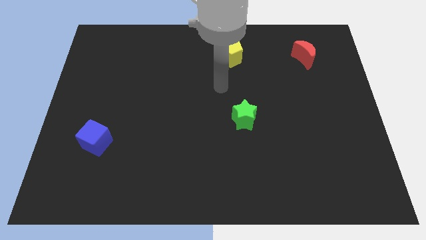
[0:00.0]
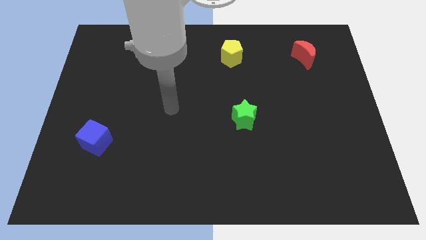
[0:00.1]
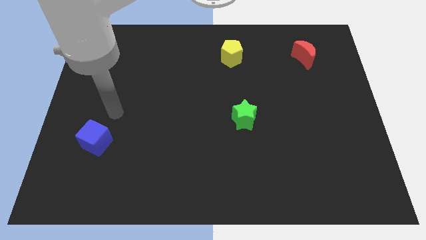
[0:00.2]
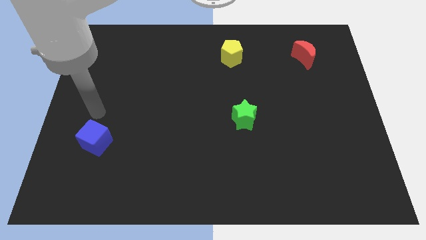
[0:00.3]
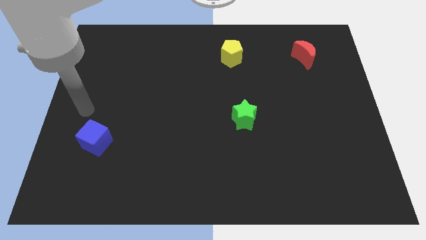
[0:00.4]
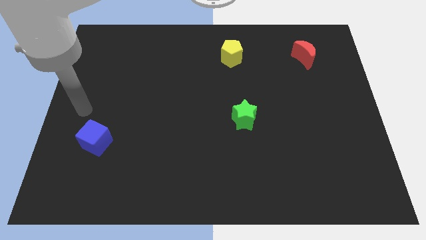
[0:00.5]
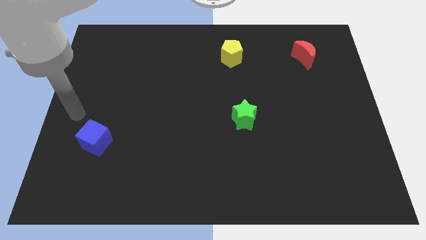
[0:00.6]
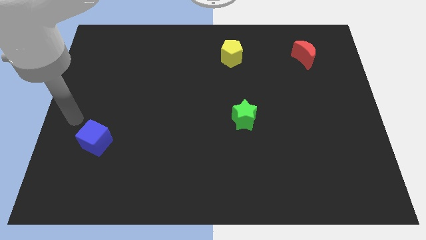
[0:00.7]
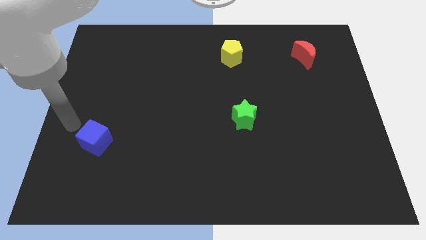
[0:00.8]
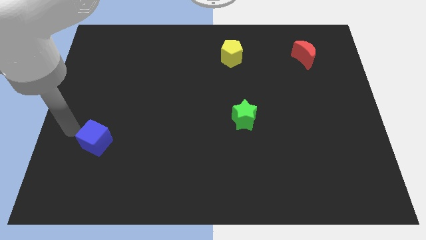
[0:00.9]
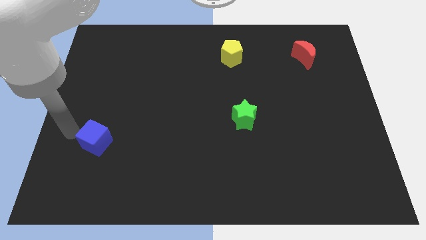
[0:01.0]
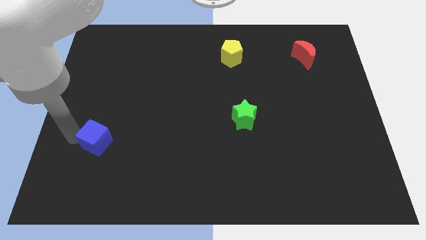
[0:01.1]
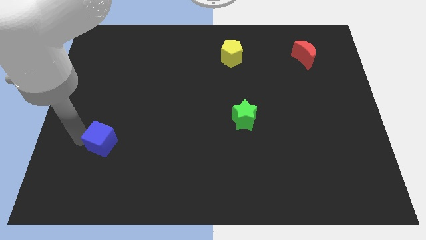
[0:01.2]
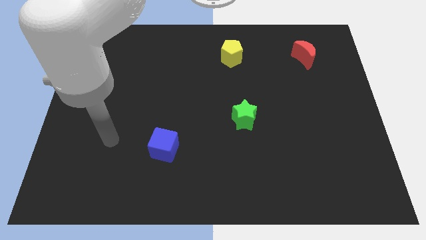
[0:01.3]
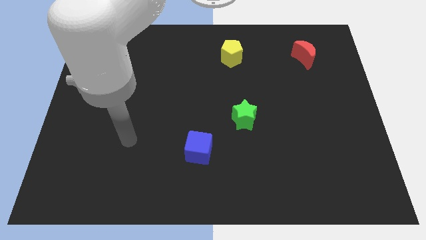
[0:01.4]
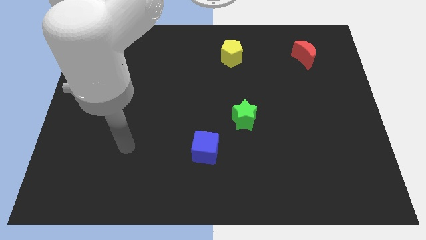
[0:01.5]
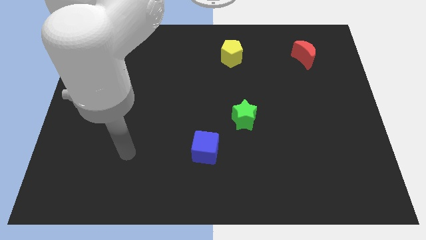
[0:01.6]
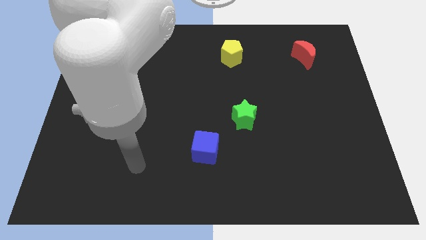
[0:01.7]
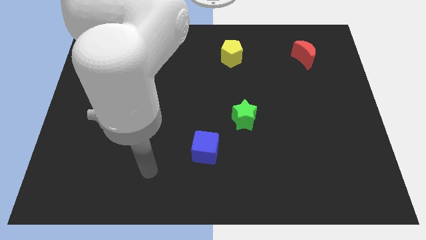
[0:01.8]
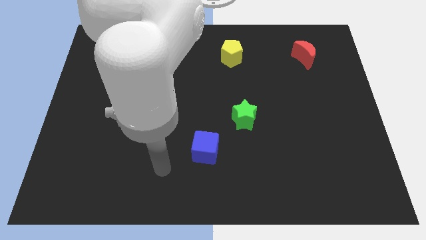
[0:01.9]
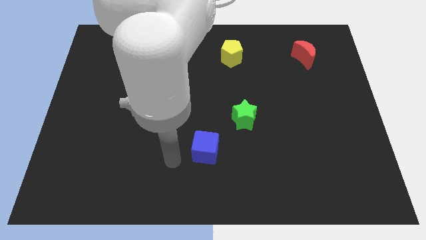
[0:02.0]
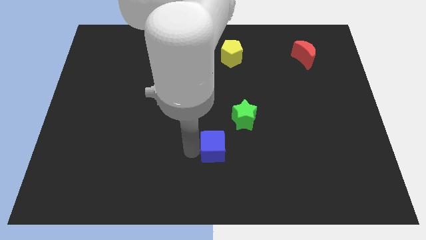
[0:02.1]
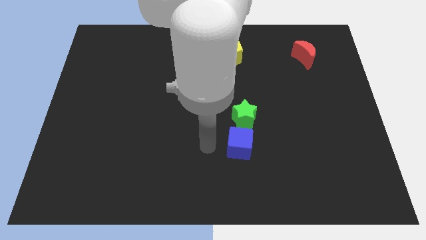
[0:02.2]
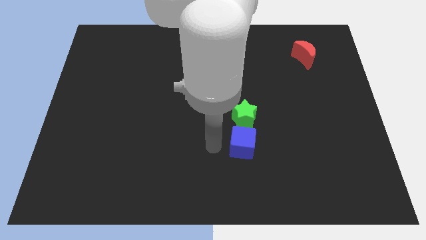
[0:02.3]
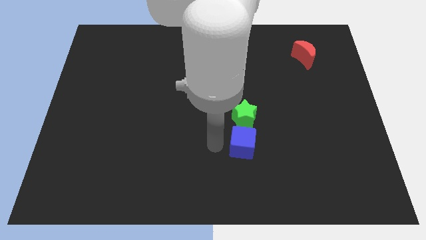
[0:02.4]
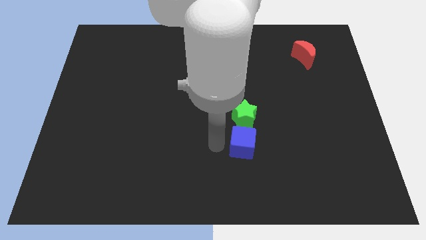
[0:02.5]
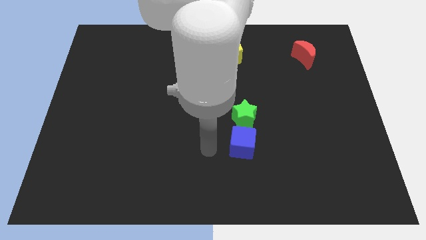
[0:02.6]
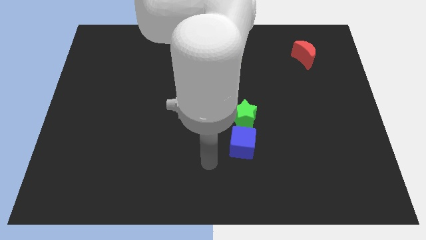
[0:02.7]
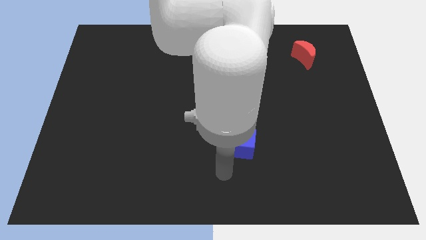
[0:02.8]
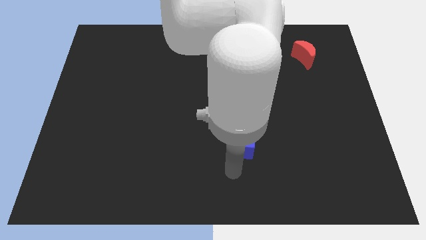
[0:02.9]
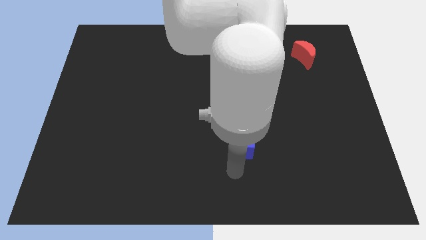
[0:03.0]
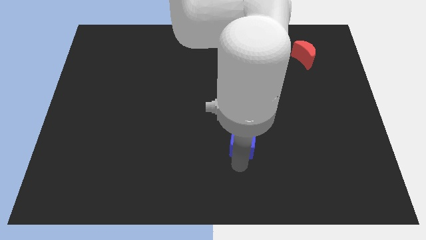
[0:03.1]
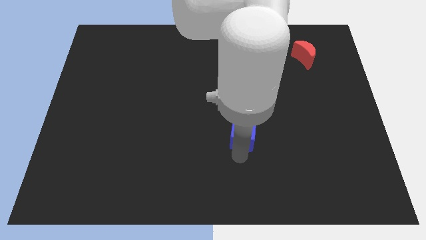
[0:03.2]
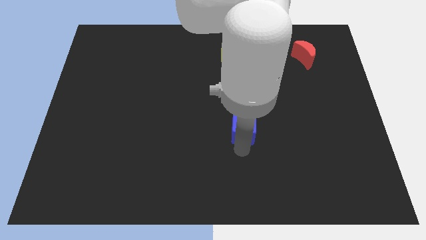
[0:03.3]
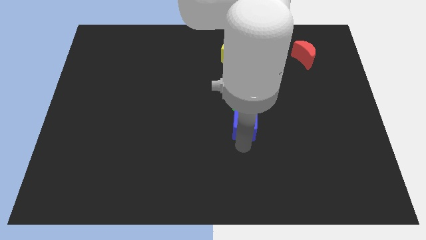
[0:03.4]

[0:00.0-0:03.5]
move the blue cube towards the green block

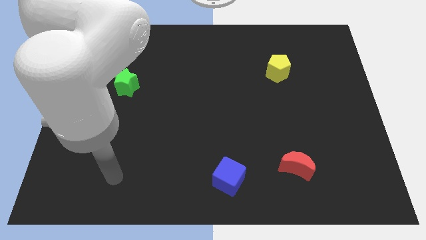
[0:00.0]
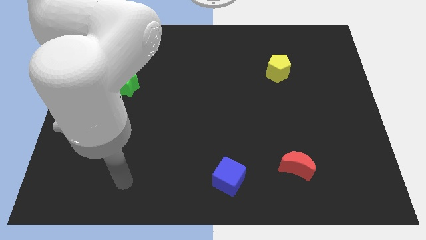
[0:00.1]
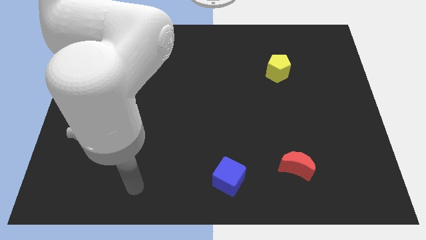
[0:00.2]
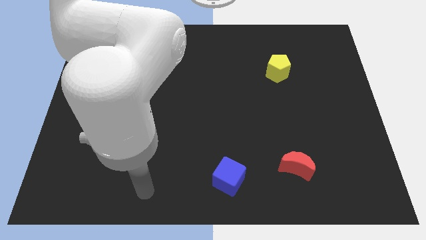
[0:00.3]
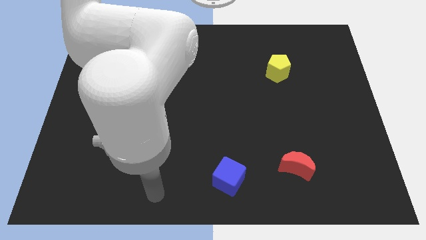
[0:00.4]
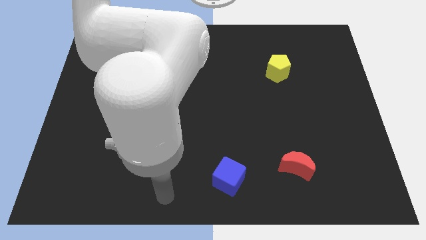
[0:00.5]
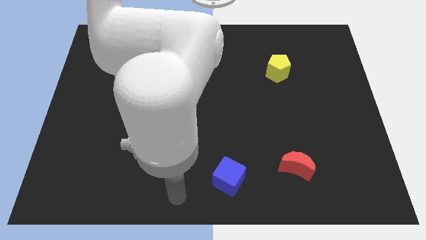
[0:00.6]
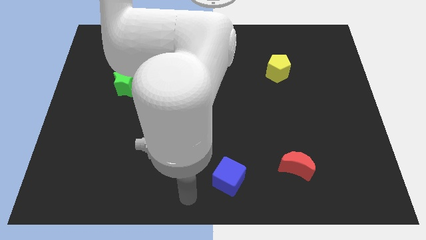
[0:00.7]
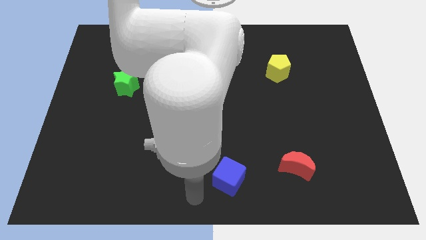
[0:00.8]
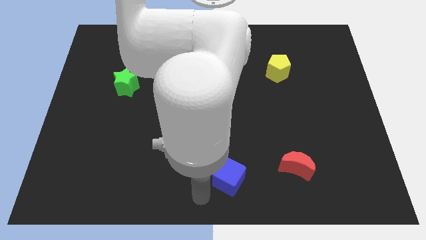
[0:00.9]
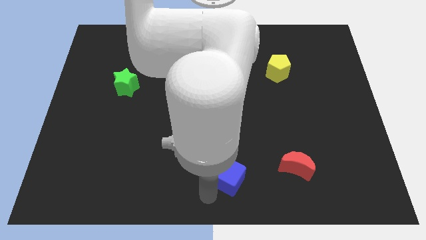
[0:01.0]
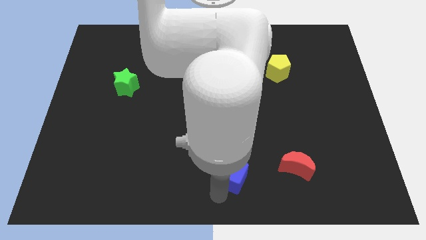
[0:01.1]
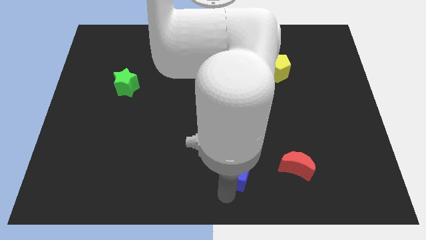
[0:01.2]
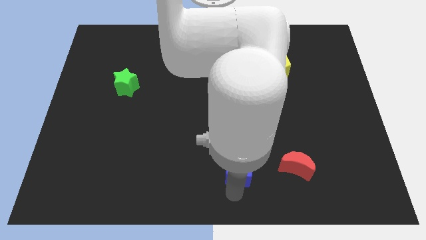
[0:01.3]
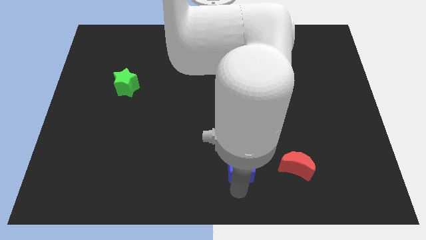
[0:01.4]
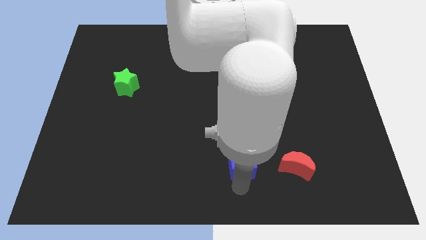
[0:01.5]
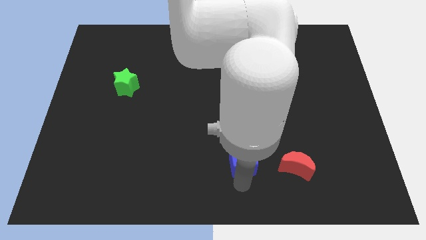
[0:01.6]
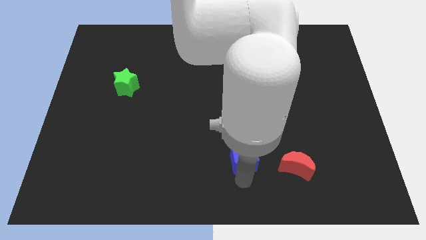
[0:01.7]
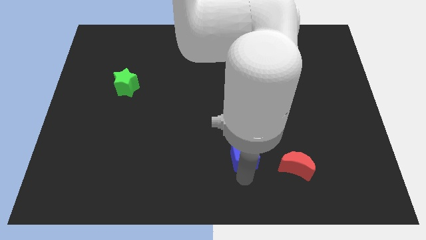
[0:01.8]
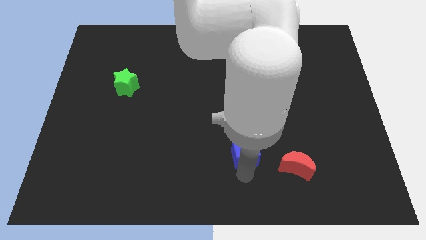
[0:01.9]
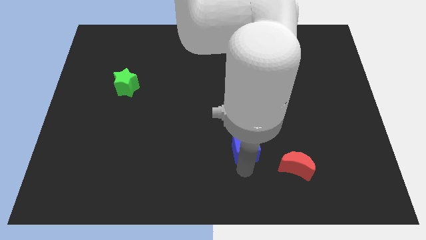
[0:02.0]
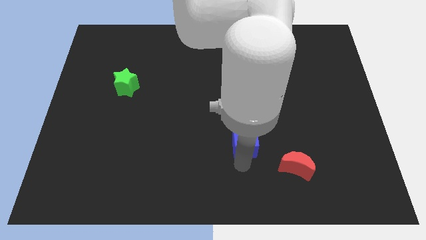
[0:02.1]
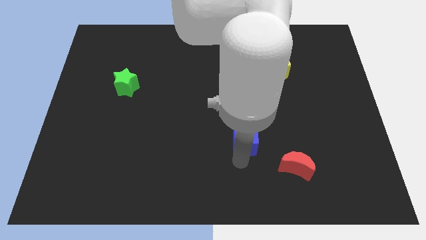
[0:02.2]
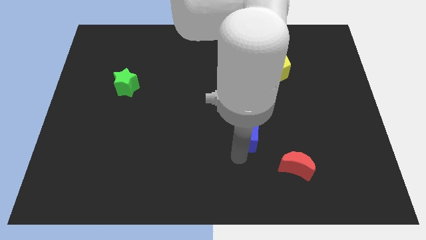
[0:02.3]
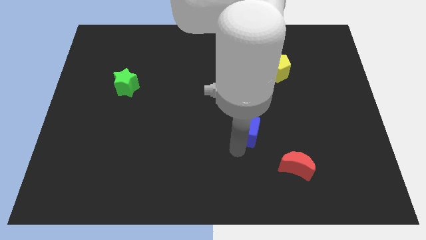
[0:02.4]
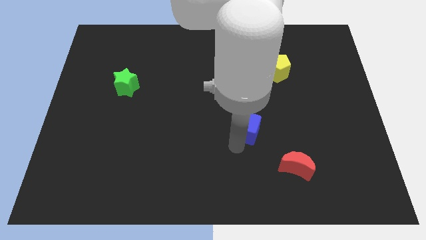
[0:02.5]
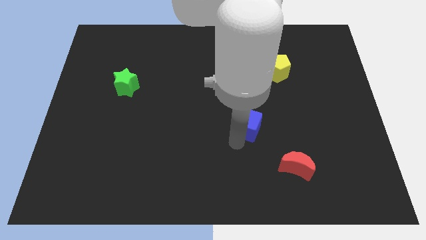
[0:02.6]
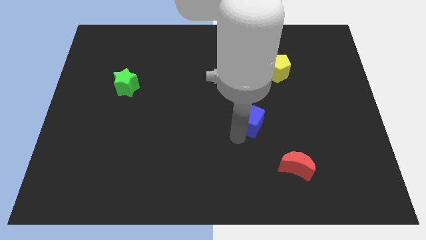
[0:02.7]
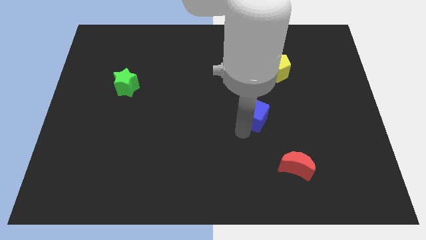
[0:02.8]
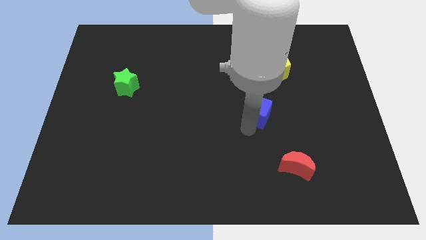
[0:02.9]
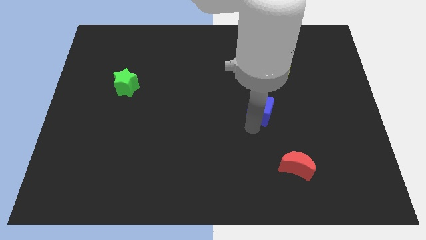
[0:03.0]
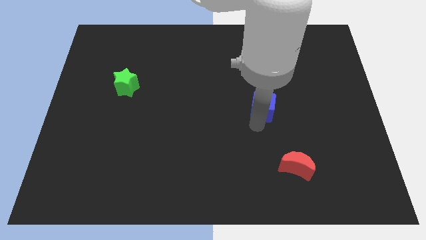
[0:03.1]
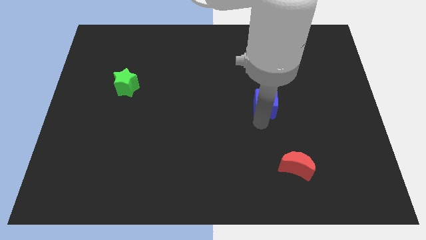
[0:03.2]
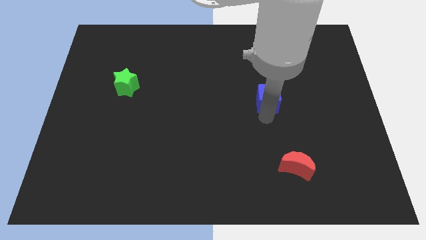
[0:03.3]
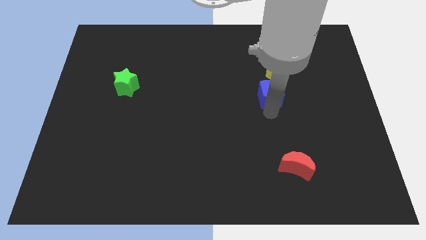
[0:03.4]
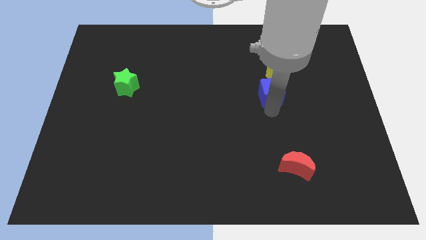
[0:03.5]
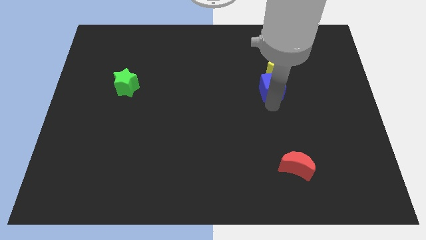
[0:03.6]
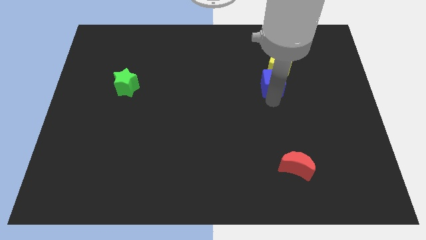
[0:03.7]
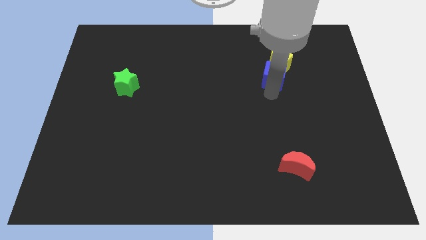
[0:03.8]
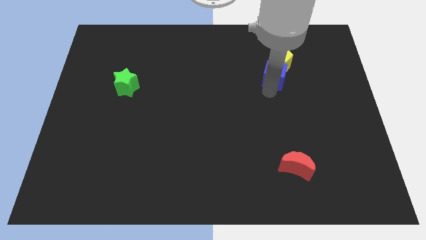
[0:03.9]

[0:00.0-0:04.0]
slide the cube to the yellow block

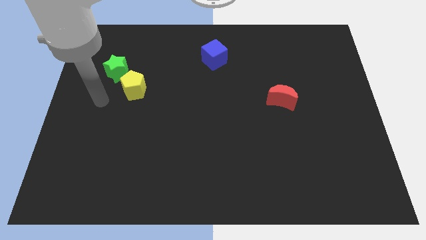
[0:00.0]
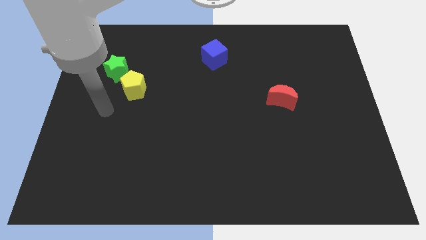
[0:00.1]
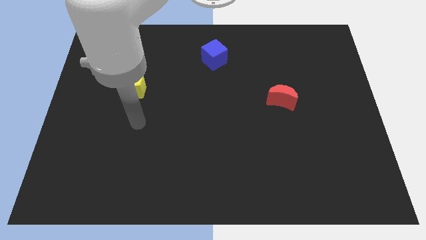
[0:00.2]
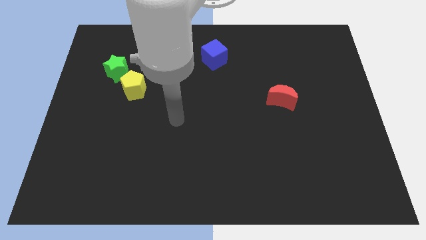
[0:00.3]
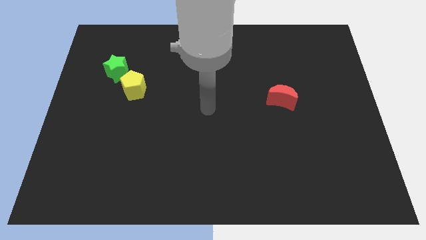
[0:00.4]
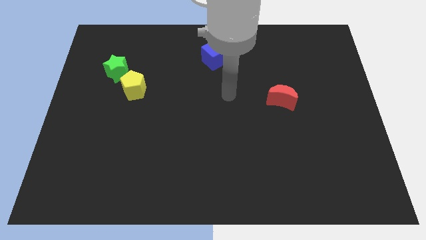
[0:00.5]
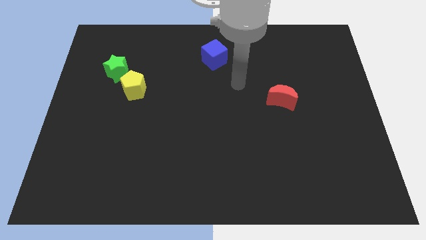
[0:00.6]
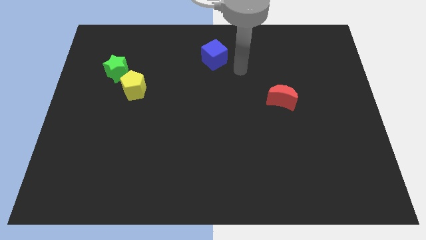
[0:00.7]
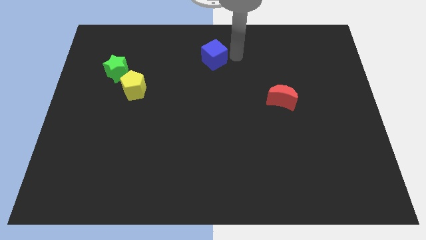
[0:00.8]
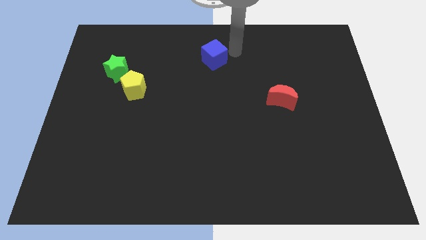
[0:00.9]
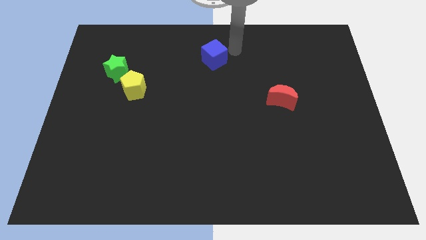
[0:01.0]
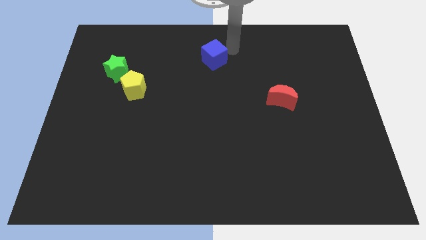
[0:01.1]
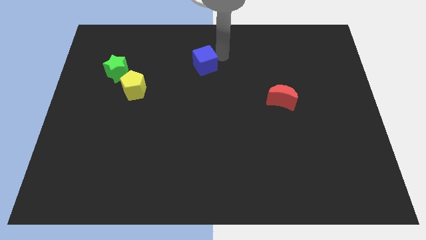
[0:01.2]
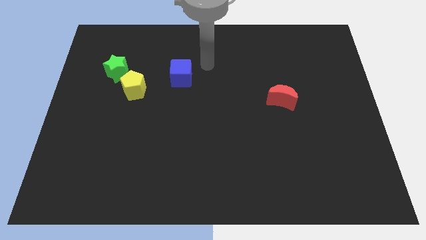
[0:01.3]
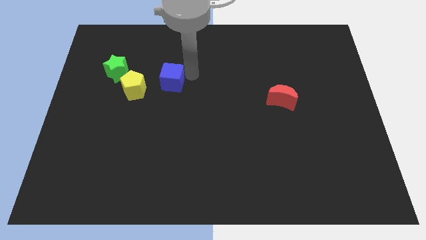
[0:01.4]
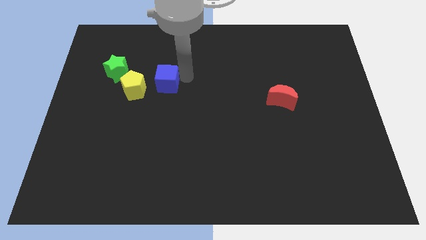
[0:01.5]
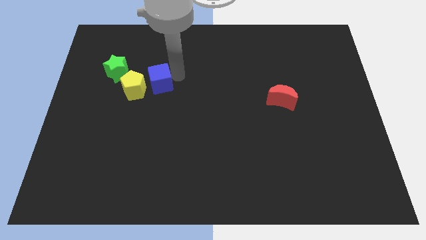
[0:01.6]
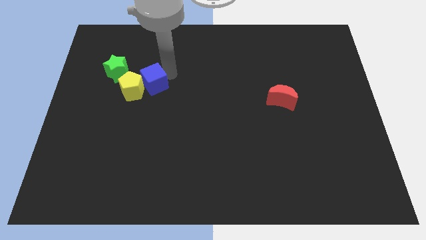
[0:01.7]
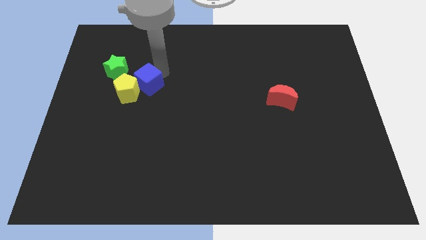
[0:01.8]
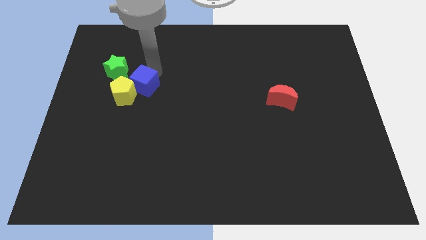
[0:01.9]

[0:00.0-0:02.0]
move the cube towards the yellow pentagon
